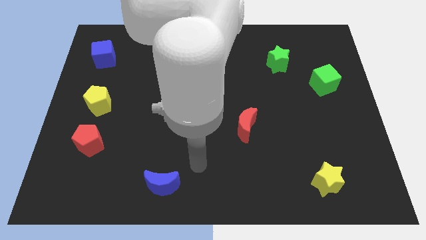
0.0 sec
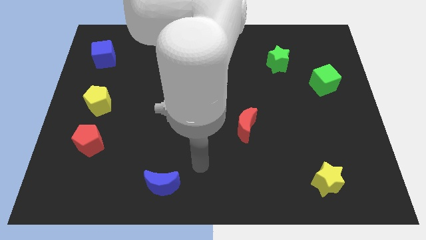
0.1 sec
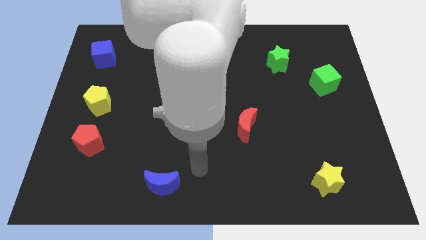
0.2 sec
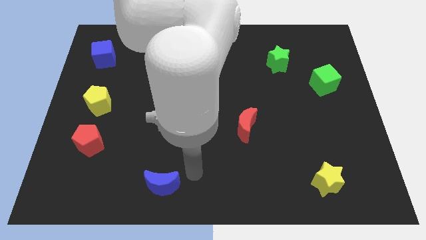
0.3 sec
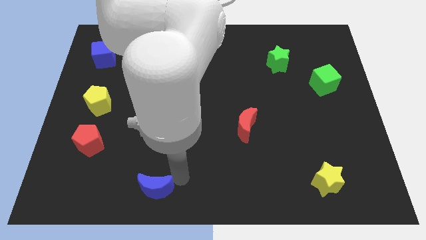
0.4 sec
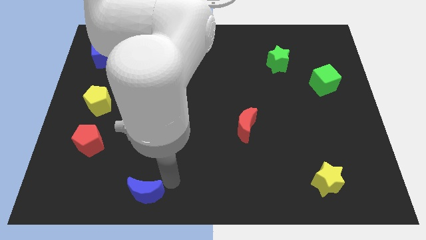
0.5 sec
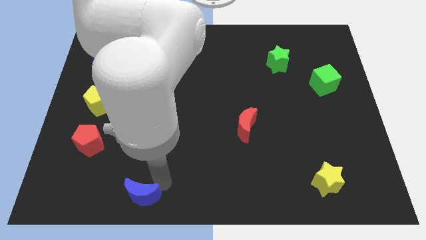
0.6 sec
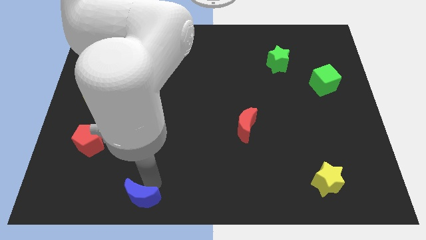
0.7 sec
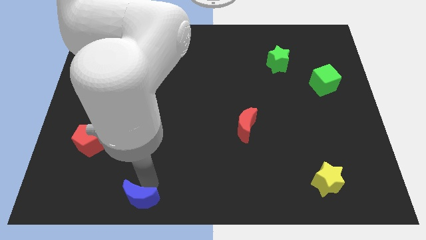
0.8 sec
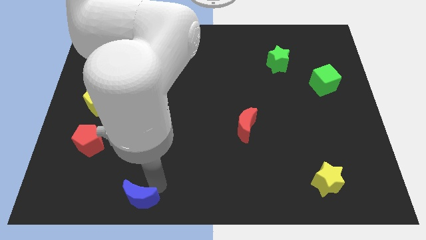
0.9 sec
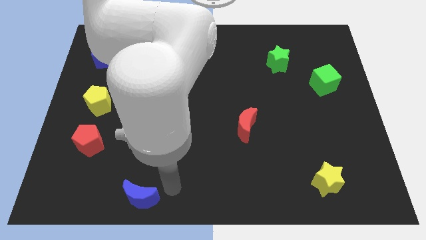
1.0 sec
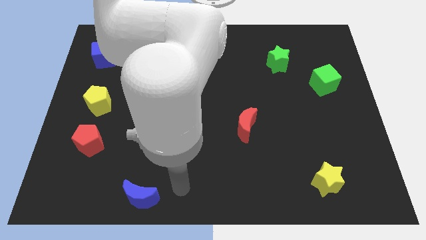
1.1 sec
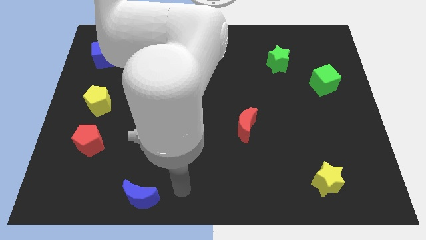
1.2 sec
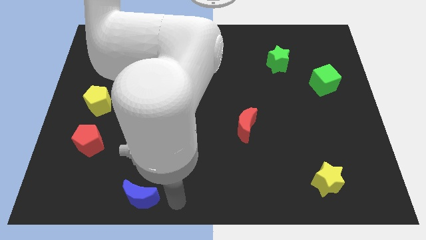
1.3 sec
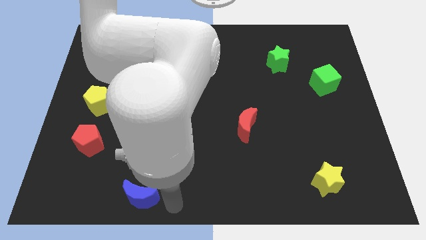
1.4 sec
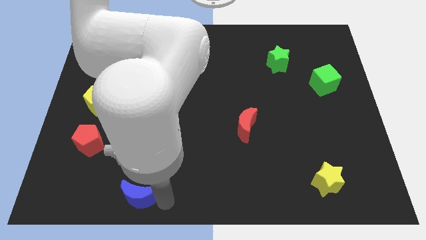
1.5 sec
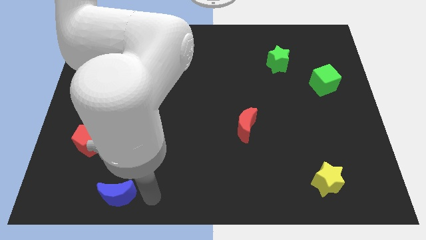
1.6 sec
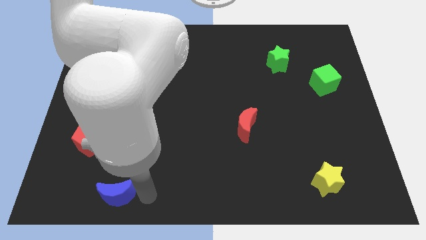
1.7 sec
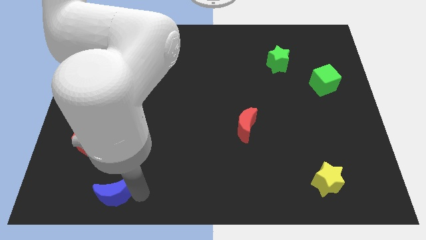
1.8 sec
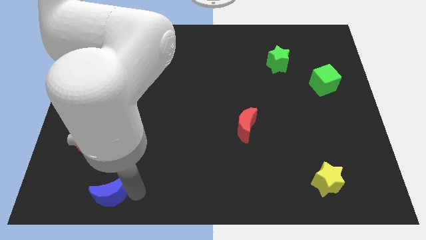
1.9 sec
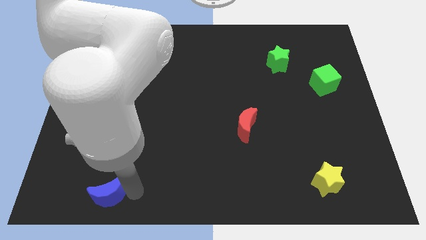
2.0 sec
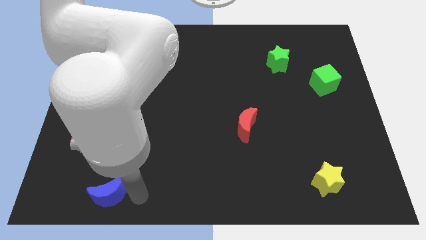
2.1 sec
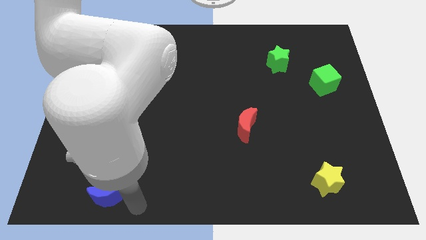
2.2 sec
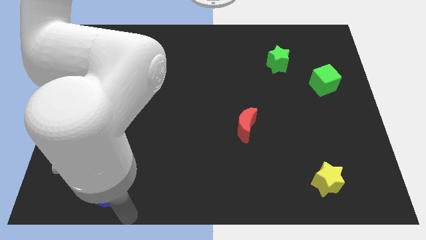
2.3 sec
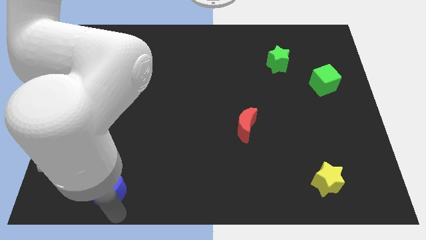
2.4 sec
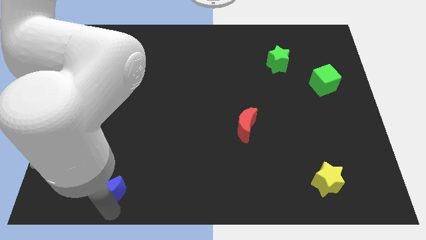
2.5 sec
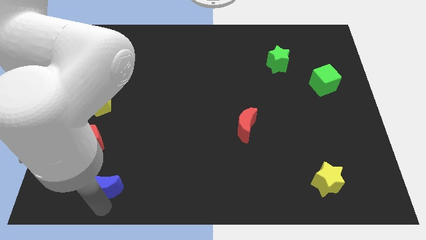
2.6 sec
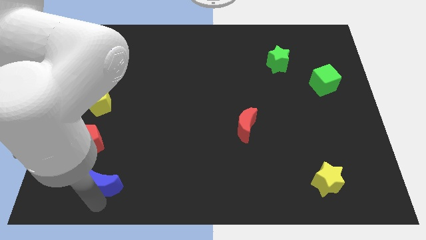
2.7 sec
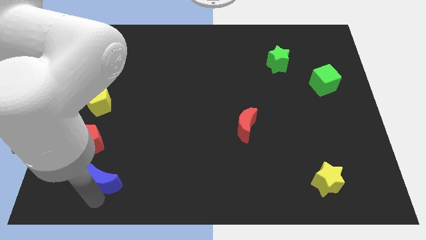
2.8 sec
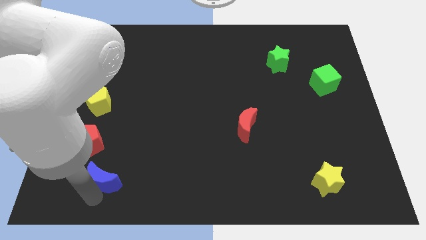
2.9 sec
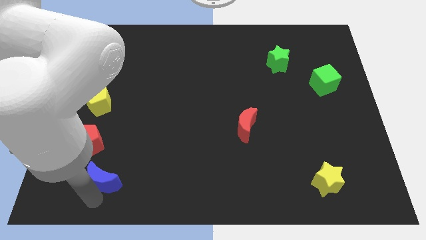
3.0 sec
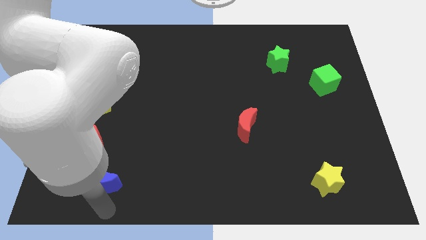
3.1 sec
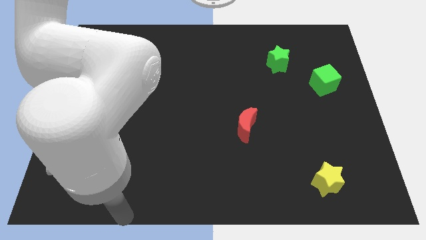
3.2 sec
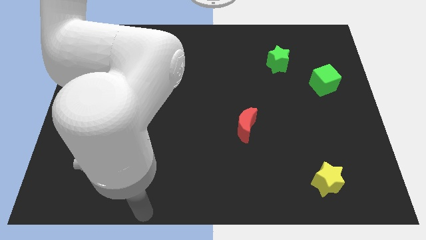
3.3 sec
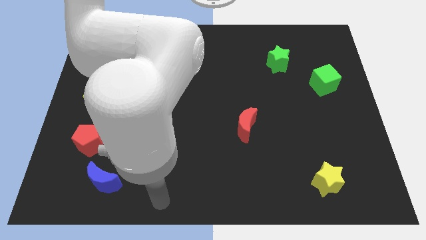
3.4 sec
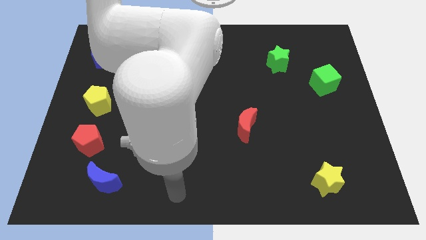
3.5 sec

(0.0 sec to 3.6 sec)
place the blue crescent at the bottom right side of red pentagon

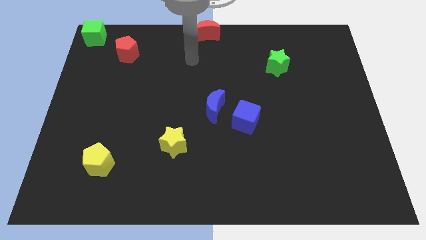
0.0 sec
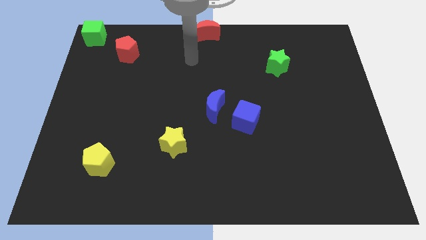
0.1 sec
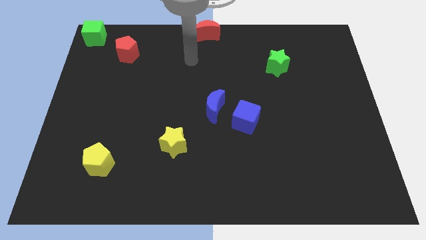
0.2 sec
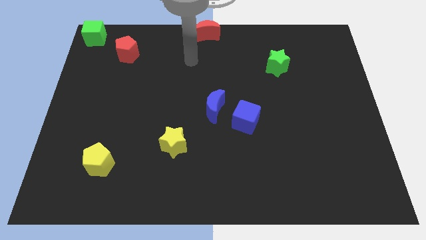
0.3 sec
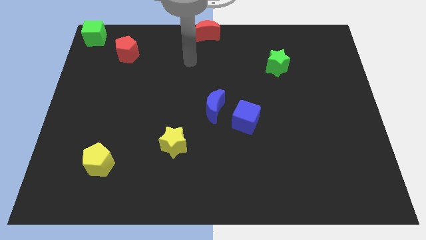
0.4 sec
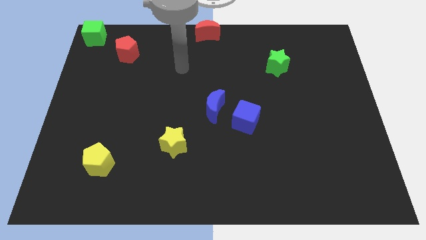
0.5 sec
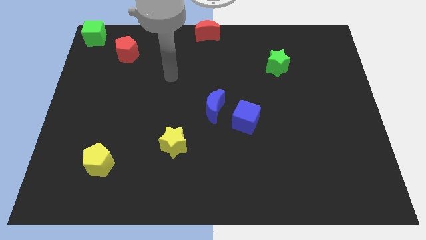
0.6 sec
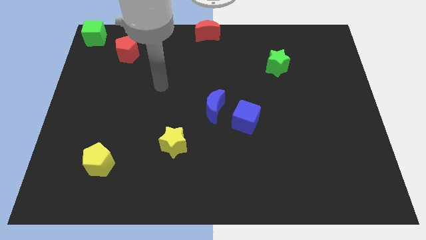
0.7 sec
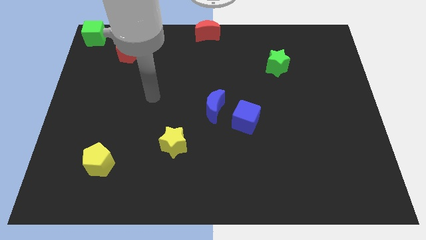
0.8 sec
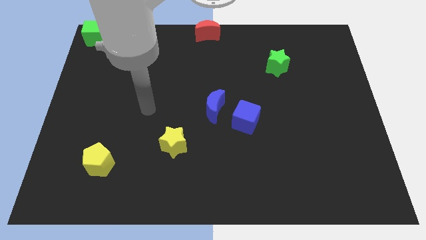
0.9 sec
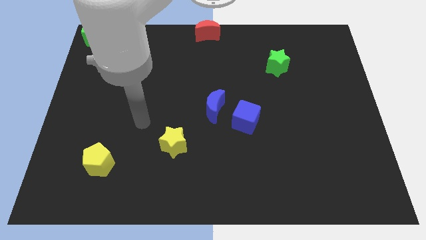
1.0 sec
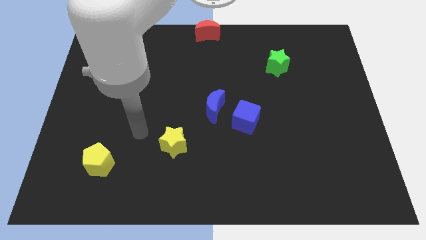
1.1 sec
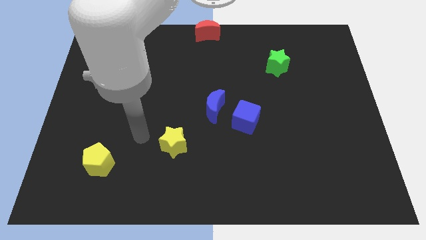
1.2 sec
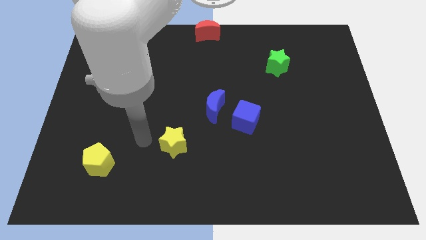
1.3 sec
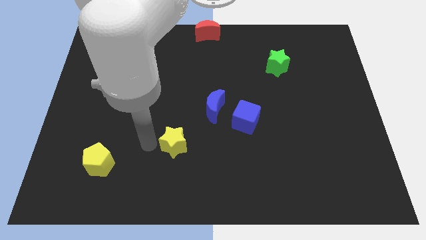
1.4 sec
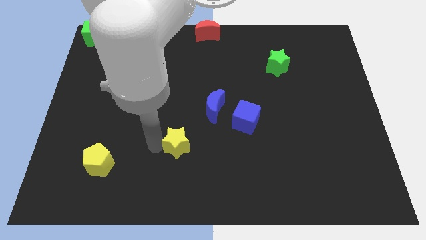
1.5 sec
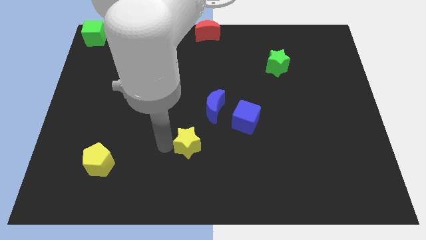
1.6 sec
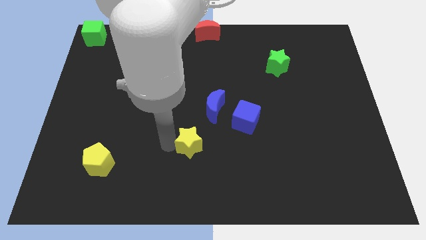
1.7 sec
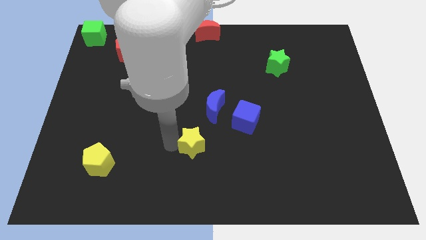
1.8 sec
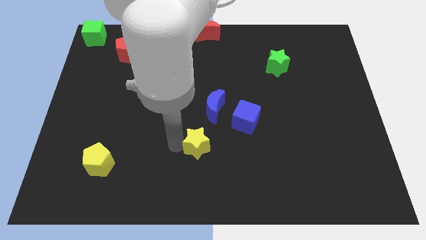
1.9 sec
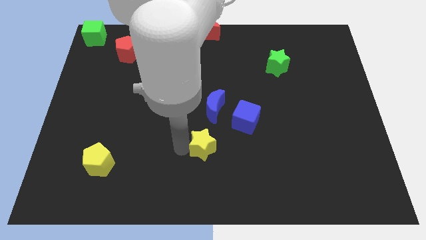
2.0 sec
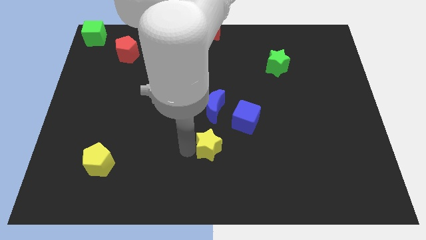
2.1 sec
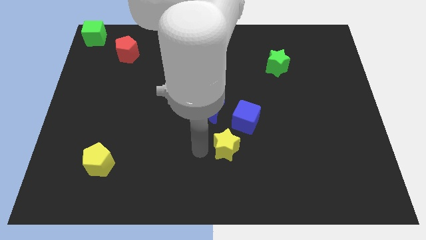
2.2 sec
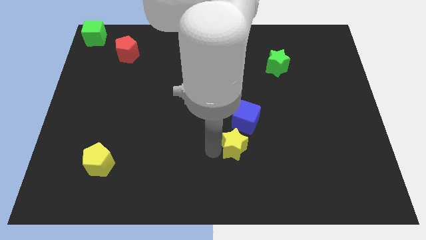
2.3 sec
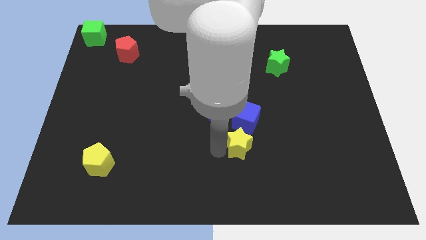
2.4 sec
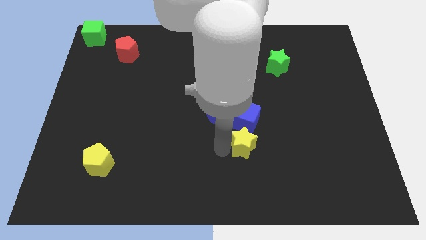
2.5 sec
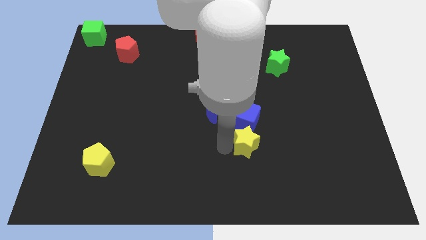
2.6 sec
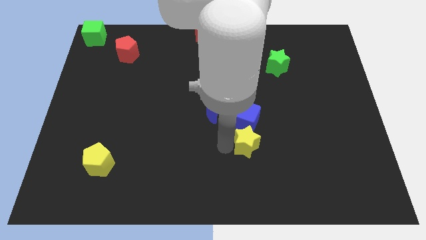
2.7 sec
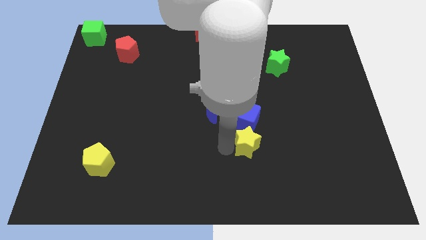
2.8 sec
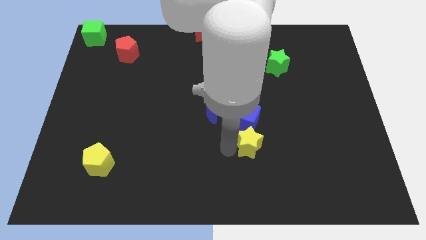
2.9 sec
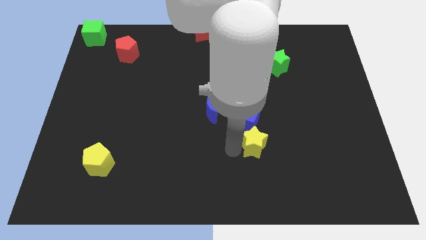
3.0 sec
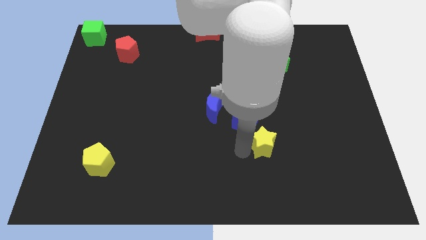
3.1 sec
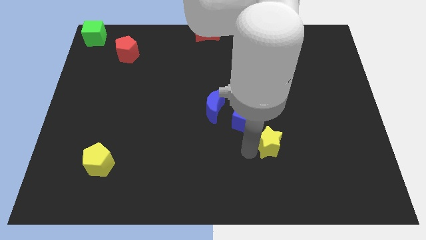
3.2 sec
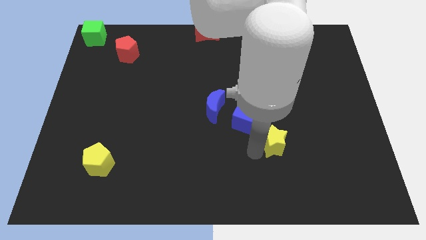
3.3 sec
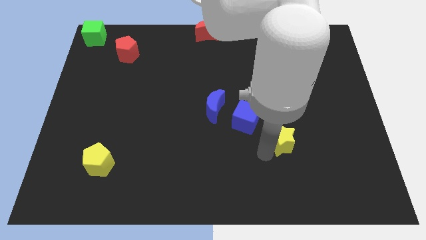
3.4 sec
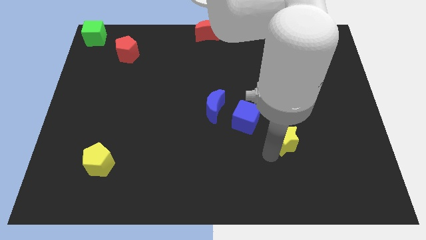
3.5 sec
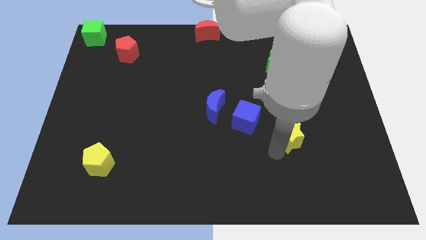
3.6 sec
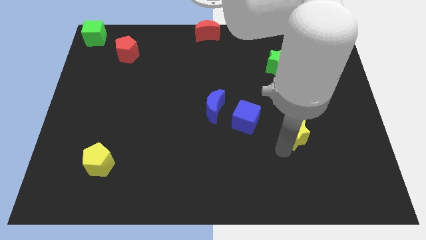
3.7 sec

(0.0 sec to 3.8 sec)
place the yellow star right to the blue cube

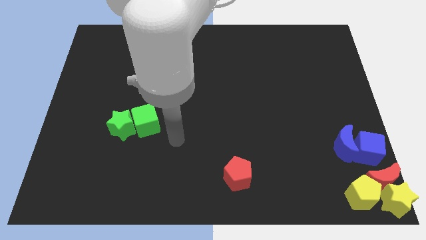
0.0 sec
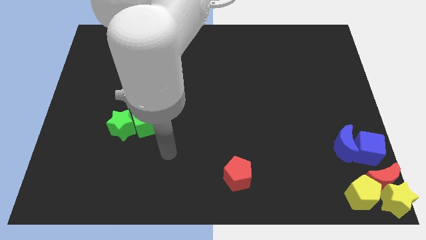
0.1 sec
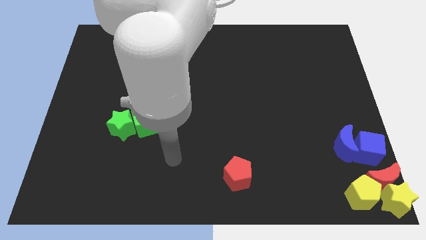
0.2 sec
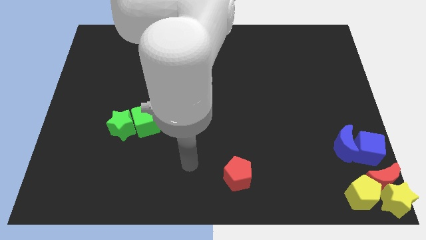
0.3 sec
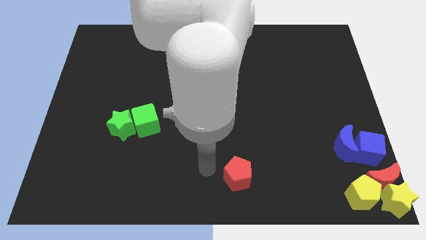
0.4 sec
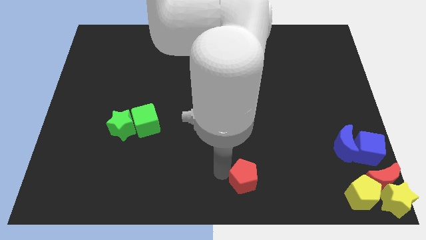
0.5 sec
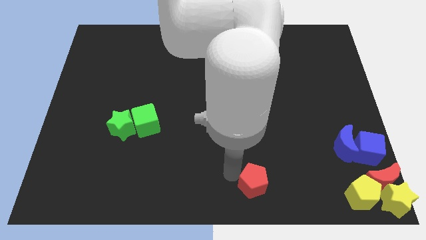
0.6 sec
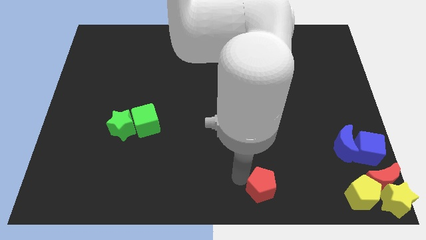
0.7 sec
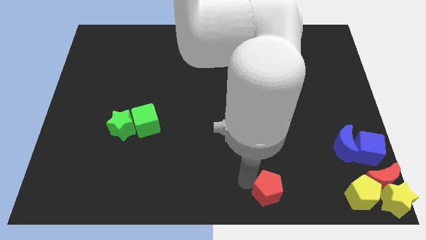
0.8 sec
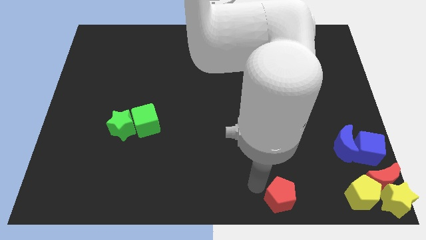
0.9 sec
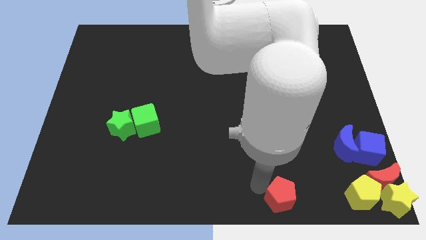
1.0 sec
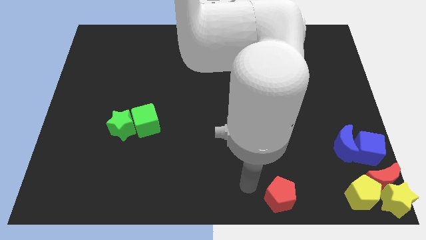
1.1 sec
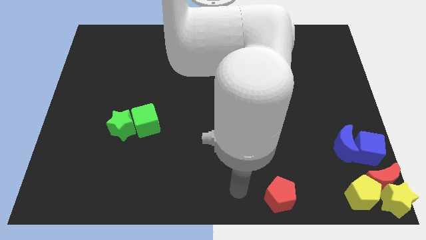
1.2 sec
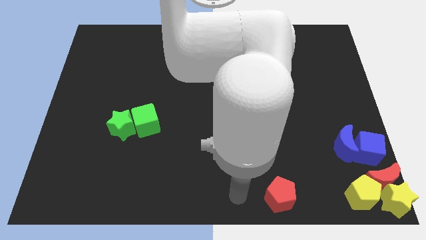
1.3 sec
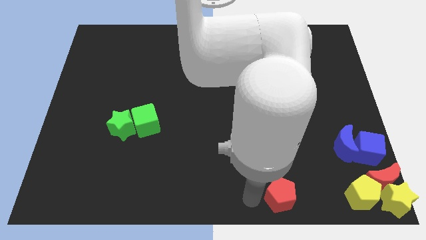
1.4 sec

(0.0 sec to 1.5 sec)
put the red pentagon to the left side of the yellow pentagon

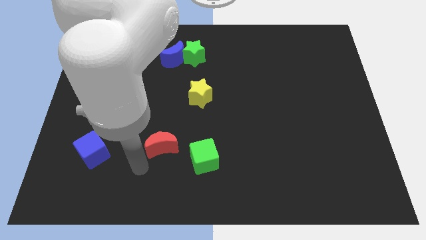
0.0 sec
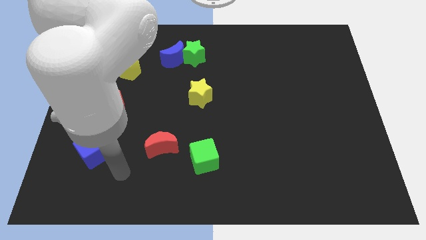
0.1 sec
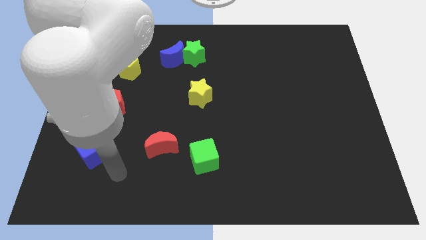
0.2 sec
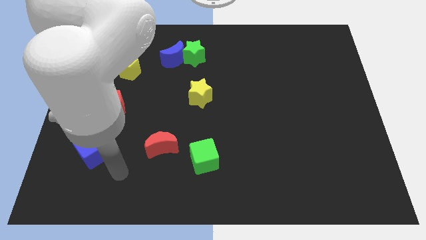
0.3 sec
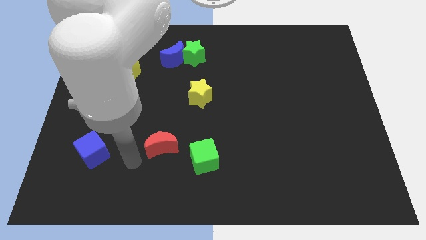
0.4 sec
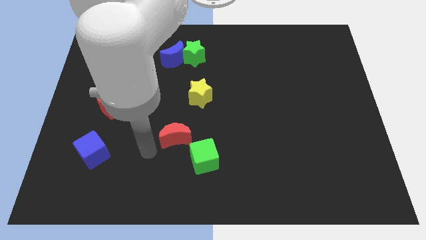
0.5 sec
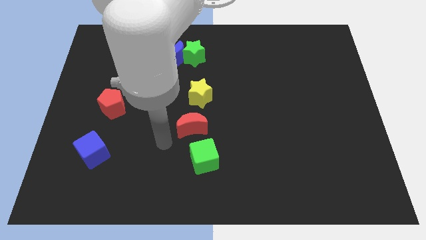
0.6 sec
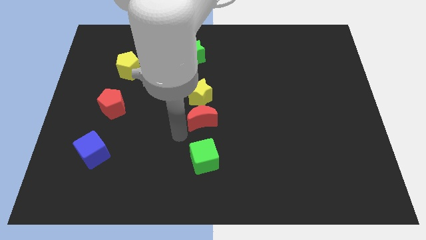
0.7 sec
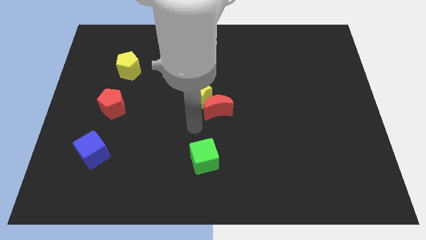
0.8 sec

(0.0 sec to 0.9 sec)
place the red moon above the green cube
